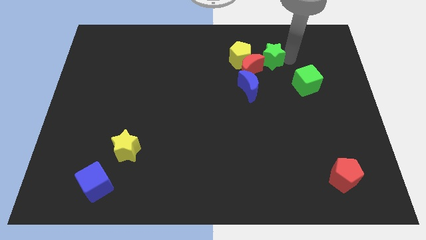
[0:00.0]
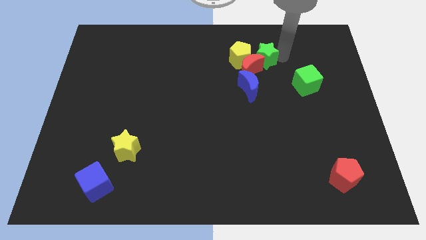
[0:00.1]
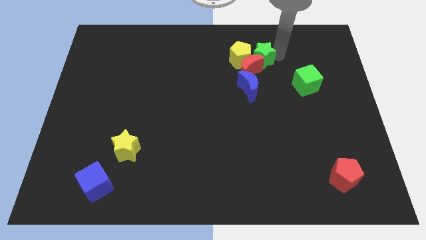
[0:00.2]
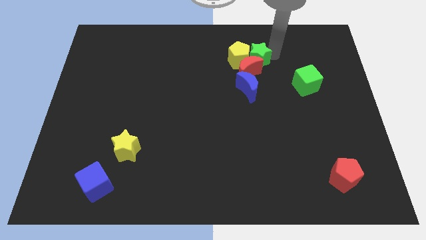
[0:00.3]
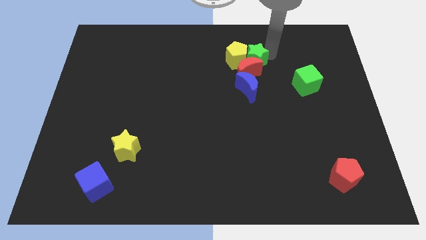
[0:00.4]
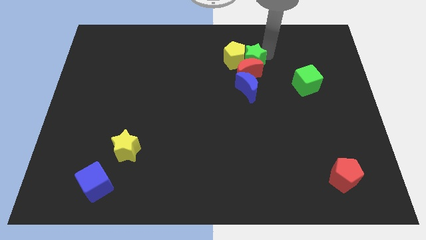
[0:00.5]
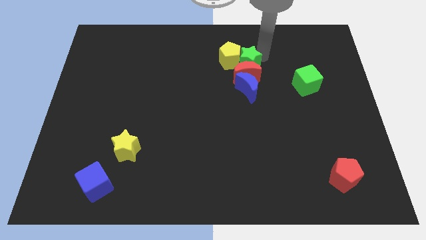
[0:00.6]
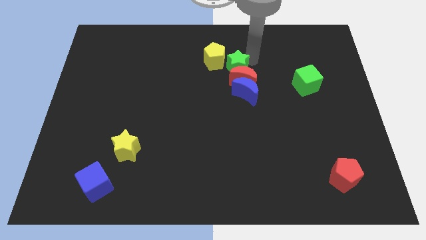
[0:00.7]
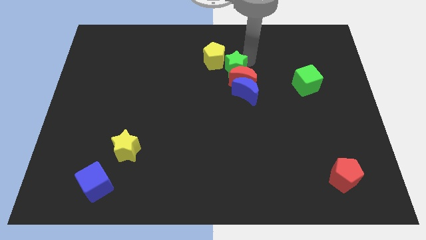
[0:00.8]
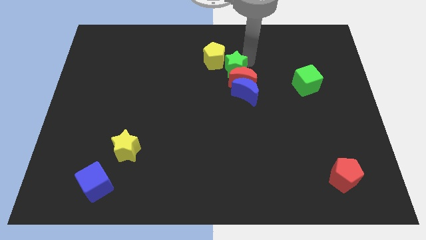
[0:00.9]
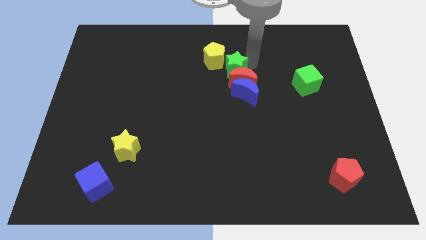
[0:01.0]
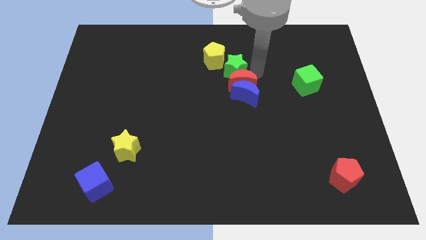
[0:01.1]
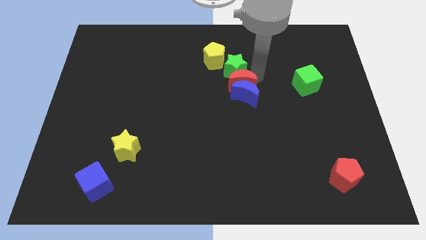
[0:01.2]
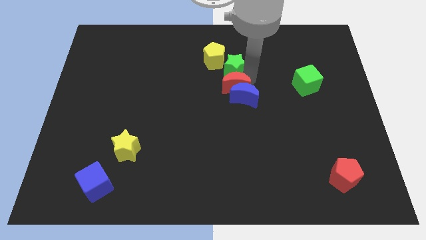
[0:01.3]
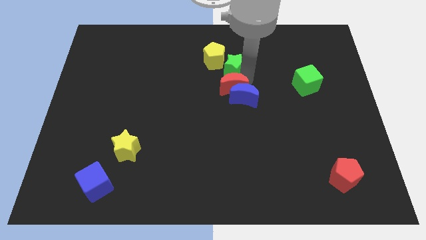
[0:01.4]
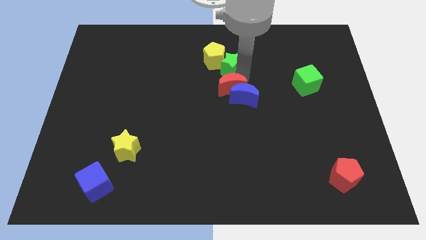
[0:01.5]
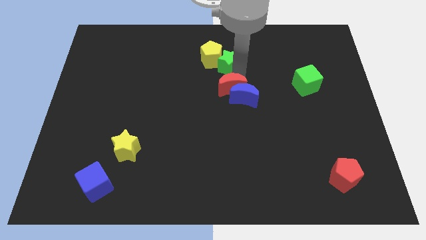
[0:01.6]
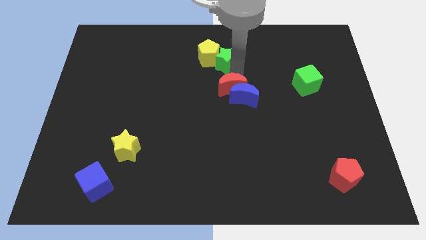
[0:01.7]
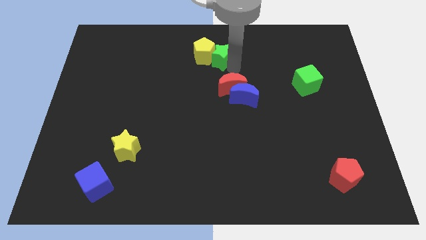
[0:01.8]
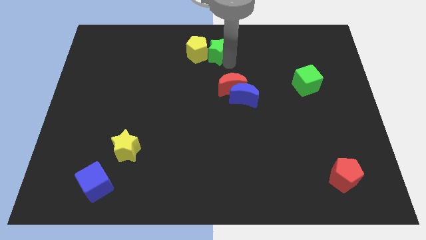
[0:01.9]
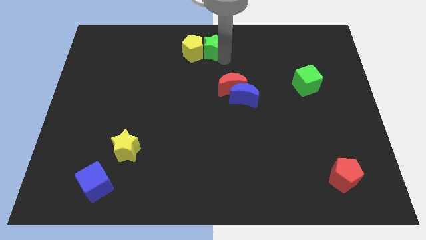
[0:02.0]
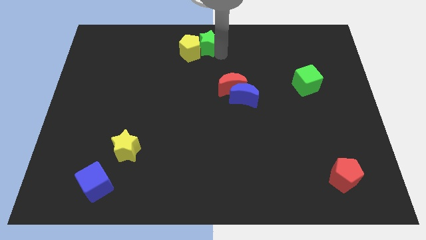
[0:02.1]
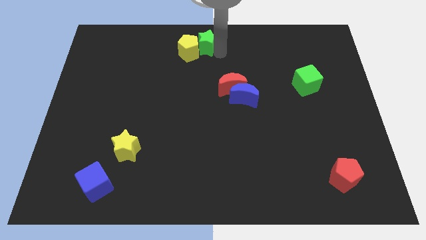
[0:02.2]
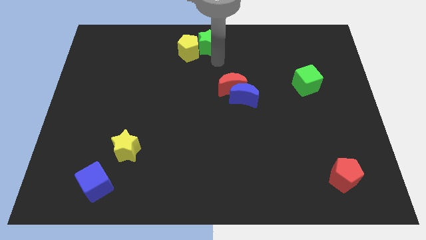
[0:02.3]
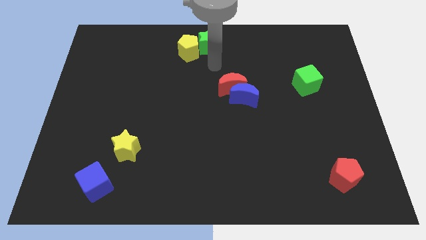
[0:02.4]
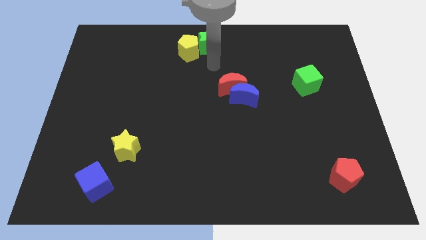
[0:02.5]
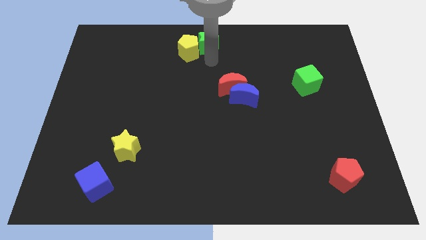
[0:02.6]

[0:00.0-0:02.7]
move the green star right beside the yellow pentagon

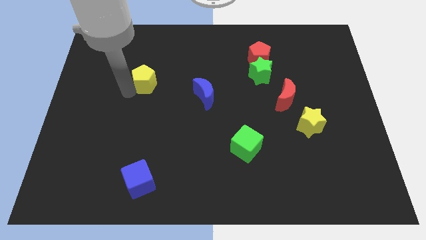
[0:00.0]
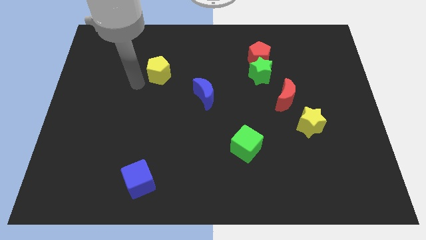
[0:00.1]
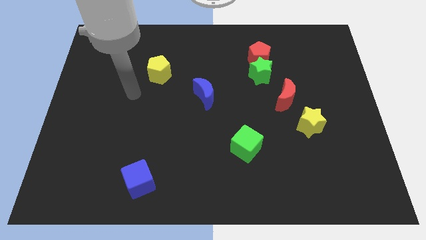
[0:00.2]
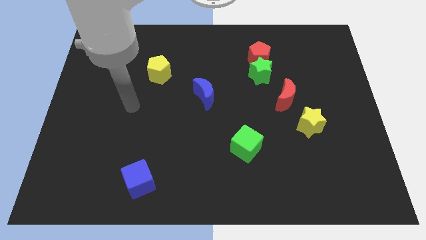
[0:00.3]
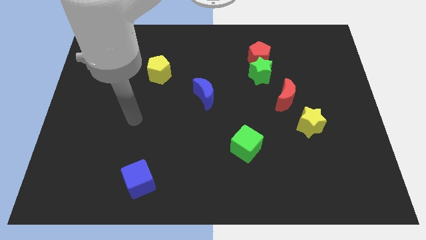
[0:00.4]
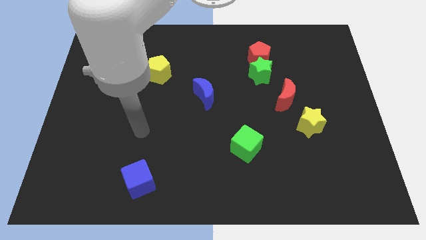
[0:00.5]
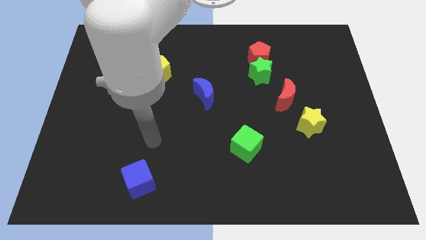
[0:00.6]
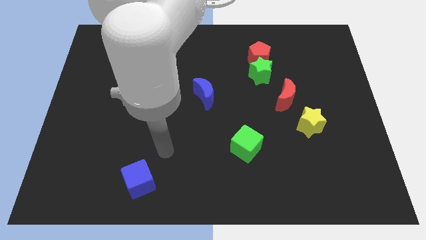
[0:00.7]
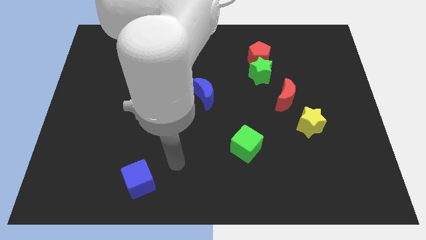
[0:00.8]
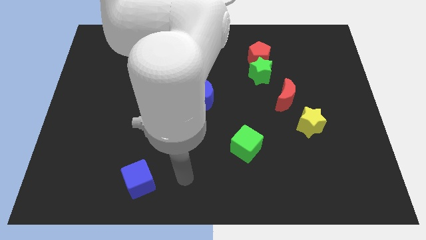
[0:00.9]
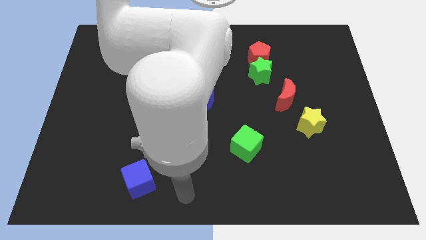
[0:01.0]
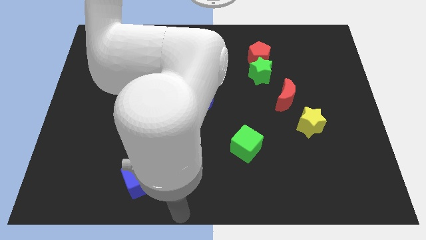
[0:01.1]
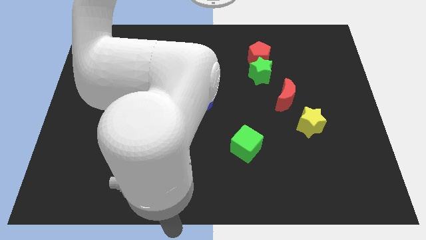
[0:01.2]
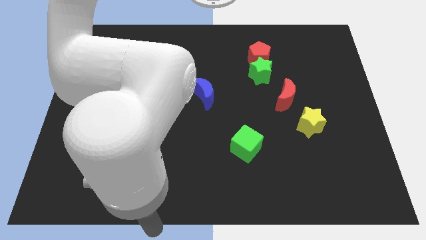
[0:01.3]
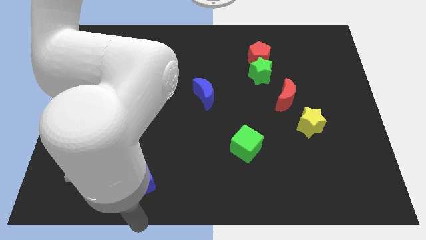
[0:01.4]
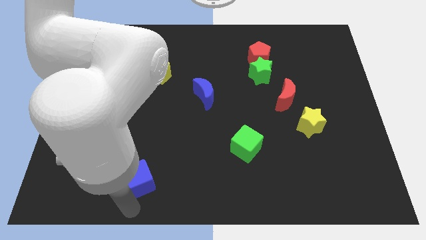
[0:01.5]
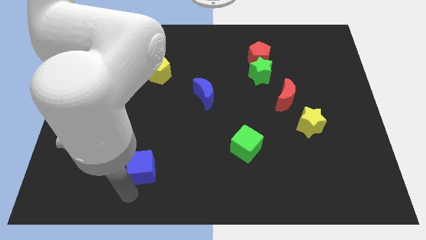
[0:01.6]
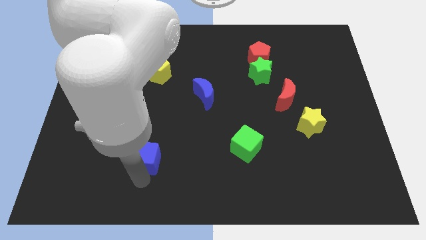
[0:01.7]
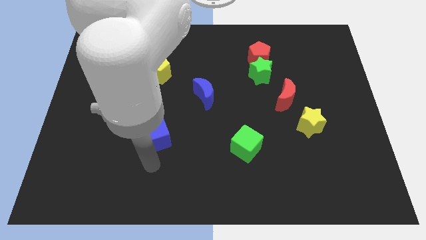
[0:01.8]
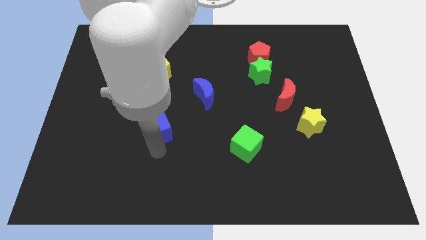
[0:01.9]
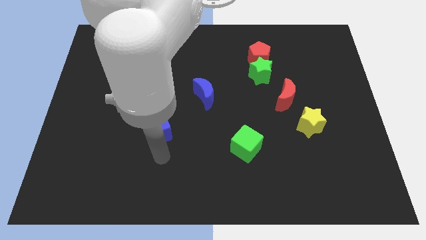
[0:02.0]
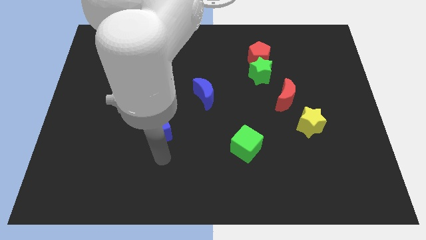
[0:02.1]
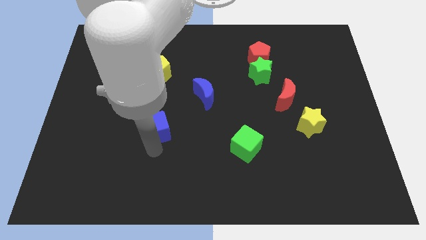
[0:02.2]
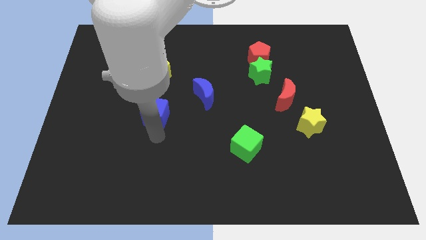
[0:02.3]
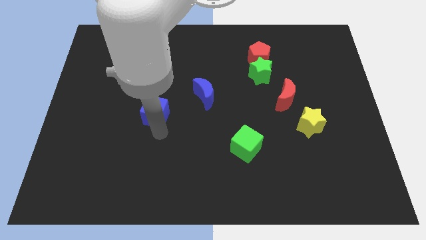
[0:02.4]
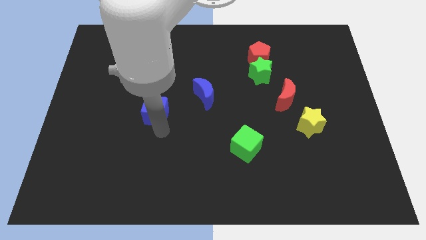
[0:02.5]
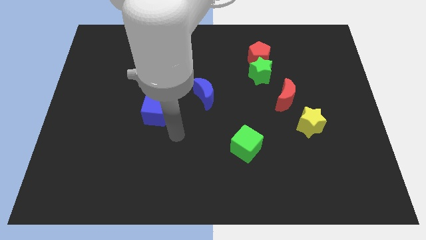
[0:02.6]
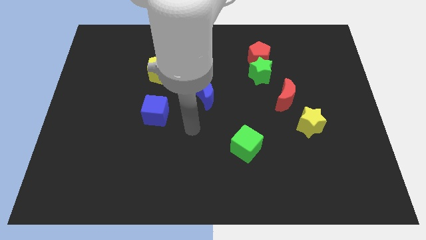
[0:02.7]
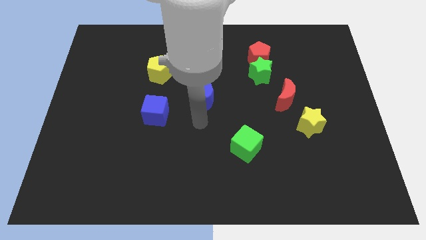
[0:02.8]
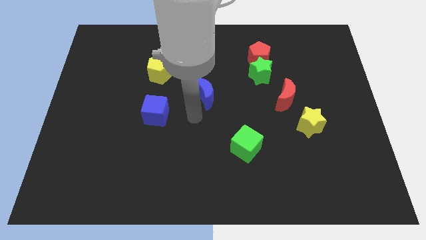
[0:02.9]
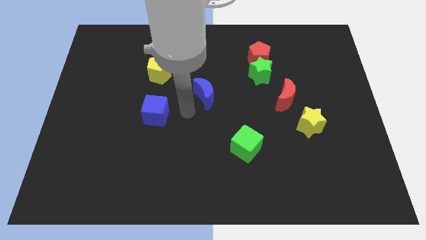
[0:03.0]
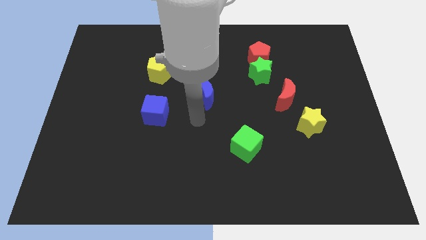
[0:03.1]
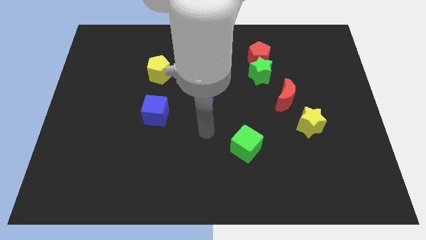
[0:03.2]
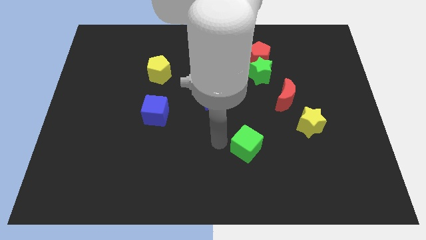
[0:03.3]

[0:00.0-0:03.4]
move the blue cube vertically below the yellow pentagon

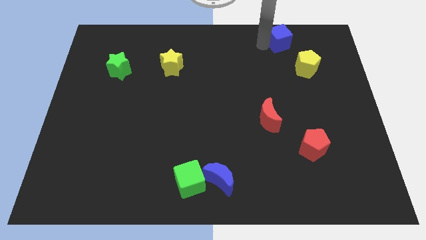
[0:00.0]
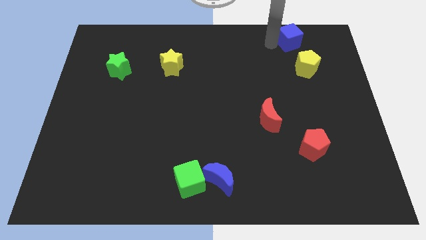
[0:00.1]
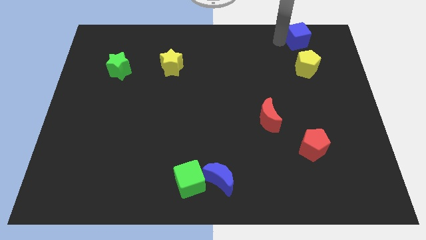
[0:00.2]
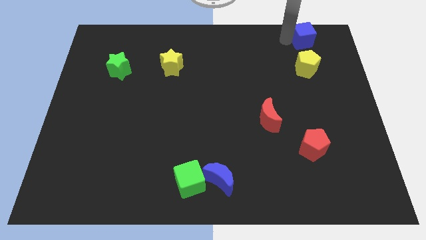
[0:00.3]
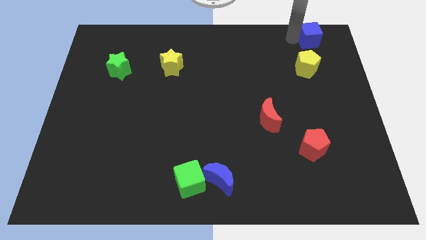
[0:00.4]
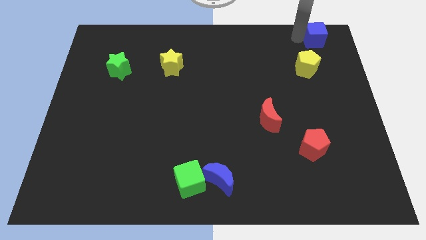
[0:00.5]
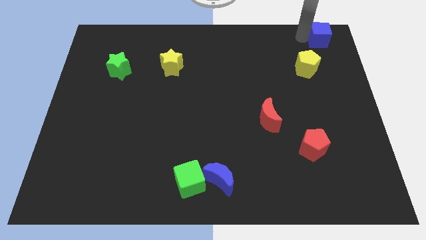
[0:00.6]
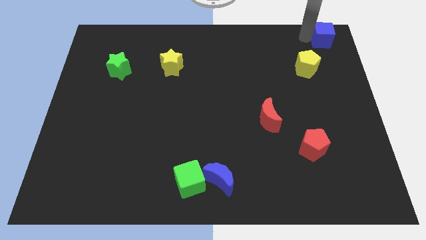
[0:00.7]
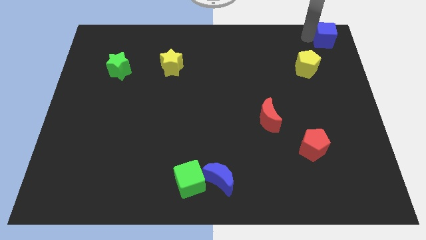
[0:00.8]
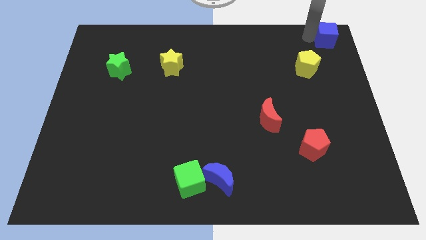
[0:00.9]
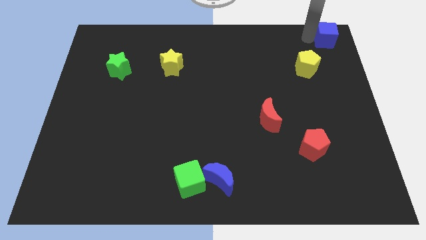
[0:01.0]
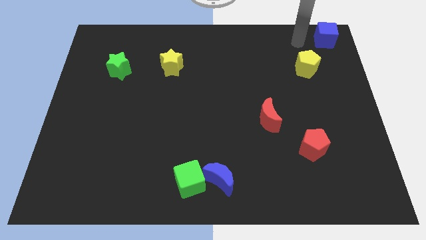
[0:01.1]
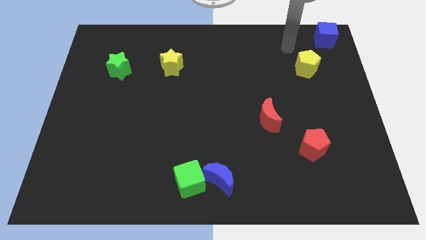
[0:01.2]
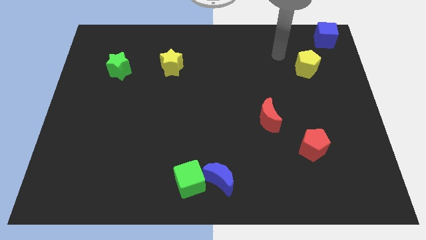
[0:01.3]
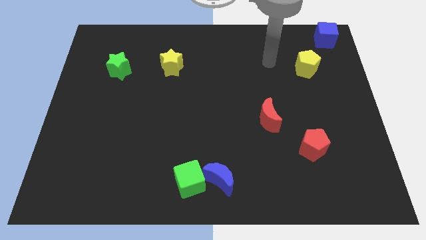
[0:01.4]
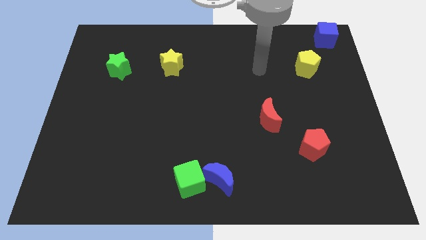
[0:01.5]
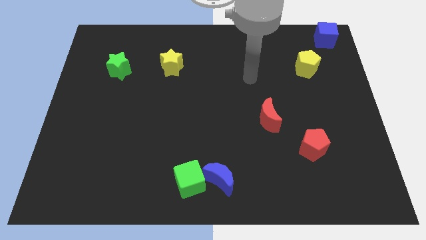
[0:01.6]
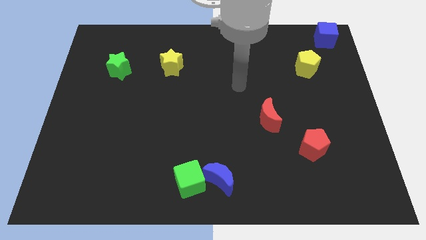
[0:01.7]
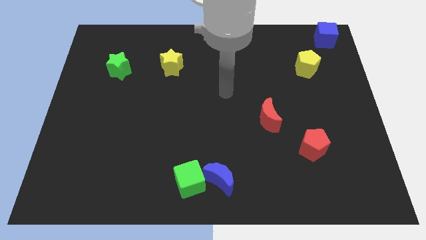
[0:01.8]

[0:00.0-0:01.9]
move the blue cube to the top right corner

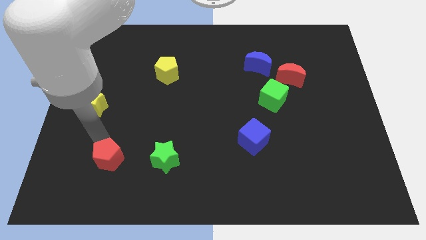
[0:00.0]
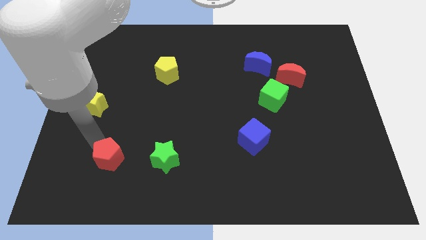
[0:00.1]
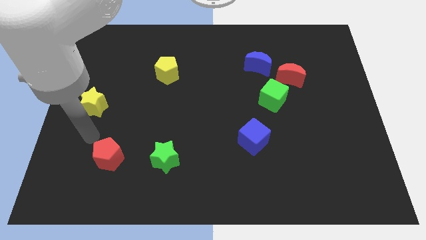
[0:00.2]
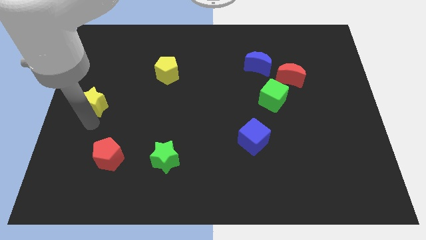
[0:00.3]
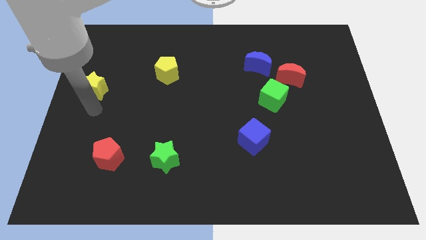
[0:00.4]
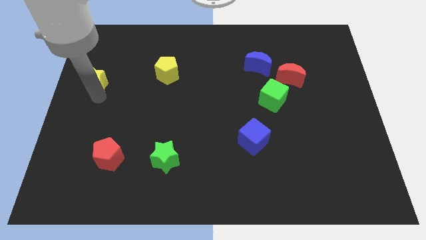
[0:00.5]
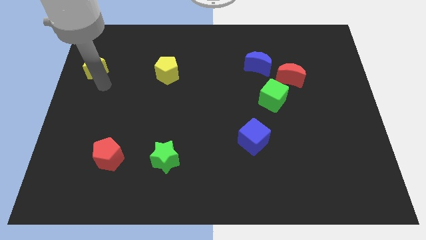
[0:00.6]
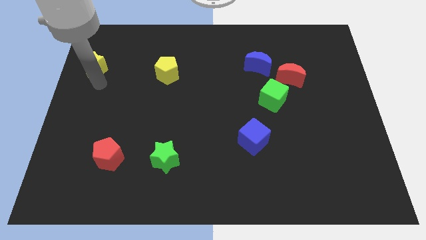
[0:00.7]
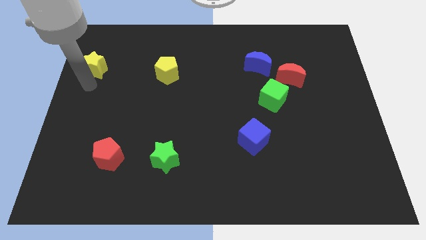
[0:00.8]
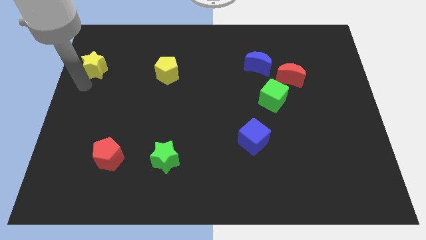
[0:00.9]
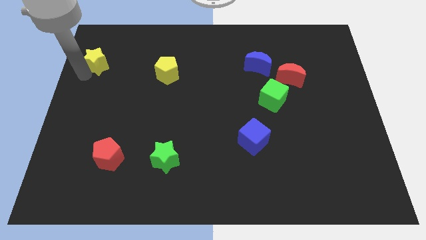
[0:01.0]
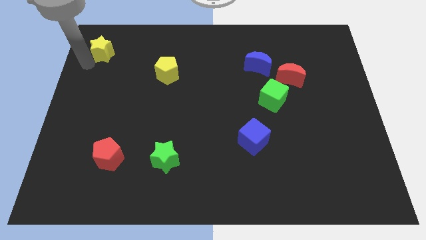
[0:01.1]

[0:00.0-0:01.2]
push the yellow star diagonally on the top left side of the yellow pentagon
